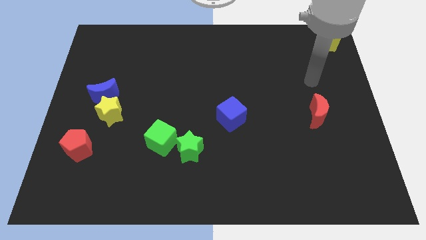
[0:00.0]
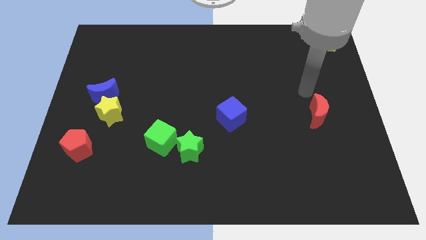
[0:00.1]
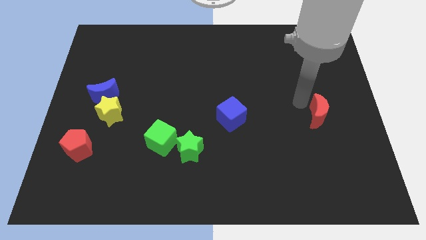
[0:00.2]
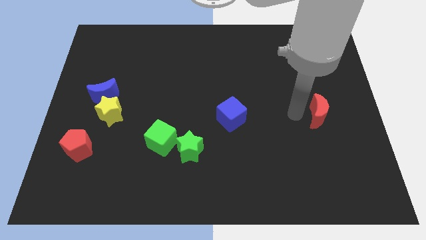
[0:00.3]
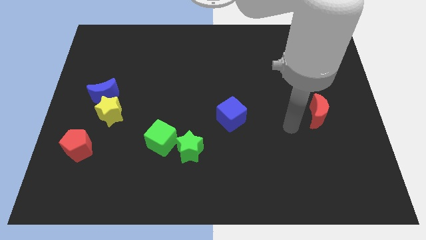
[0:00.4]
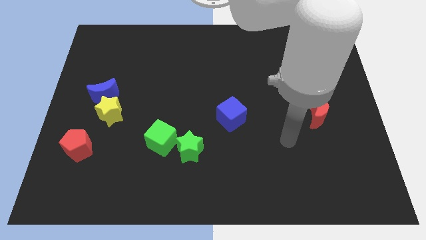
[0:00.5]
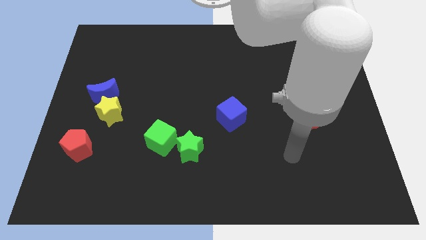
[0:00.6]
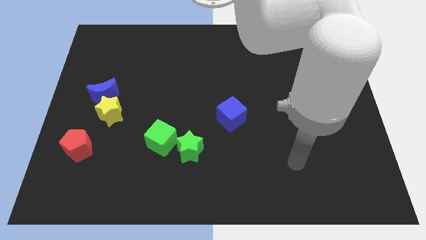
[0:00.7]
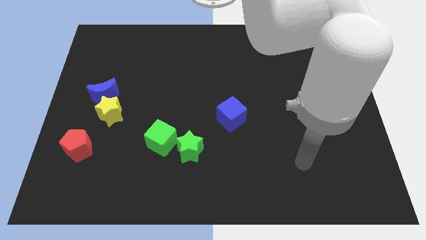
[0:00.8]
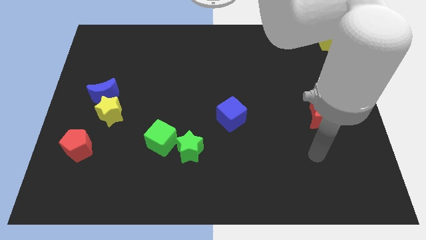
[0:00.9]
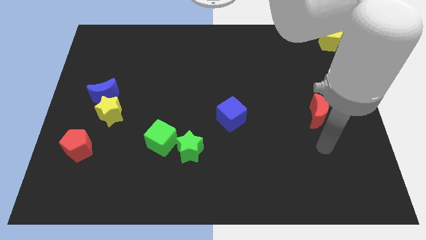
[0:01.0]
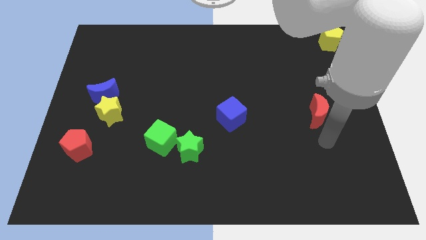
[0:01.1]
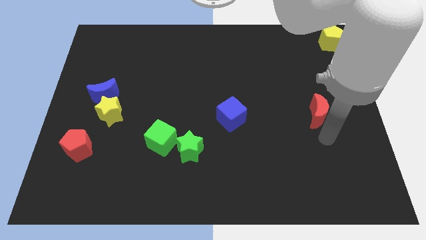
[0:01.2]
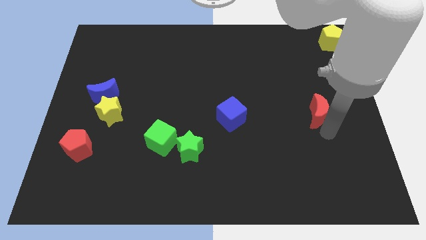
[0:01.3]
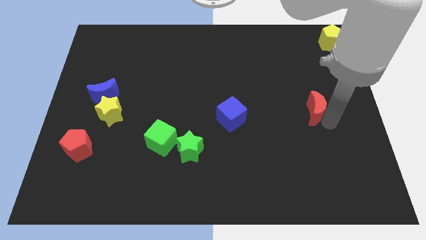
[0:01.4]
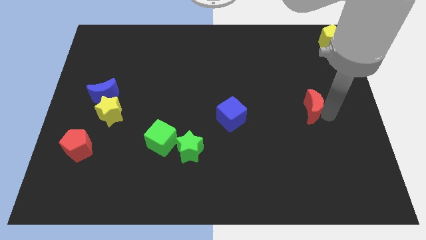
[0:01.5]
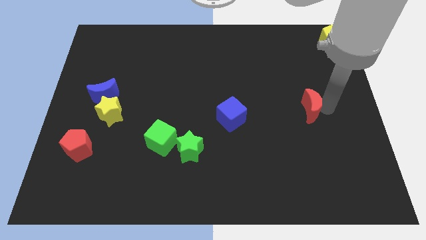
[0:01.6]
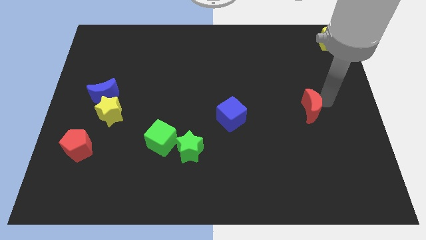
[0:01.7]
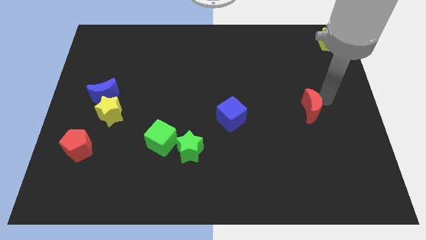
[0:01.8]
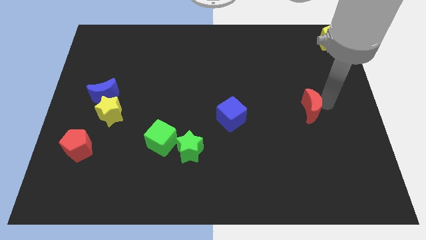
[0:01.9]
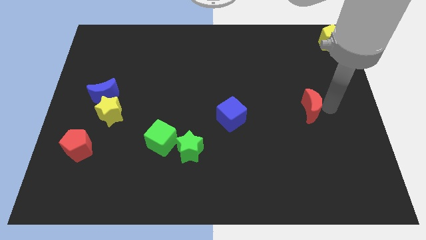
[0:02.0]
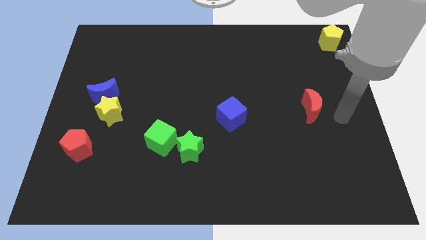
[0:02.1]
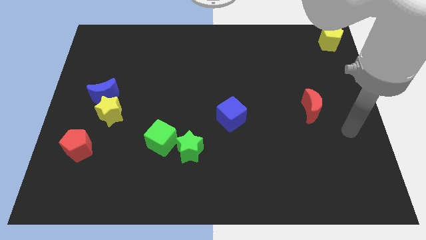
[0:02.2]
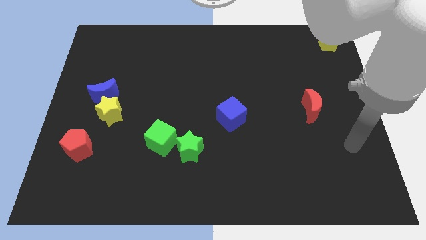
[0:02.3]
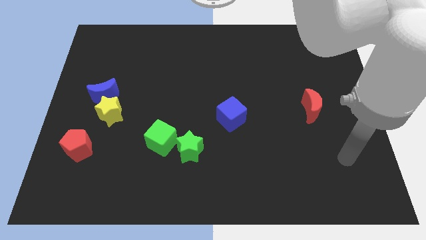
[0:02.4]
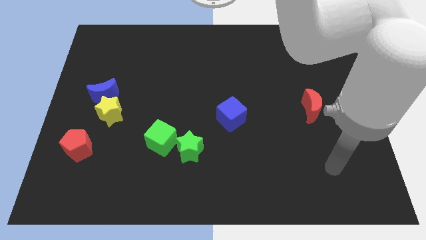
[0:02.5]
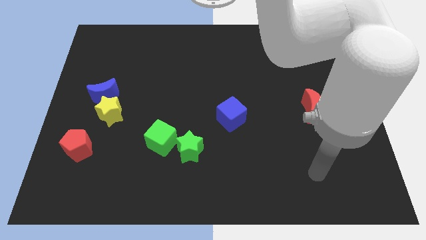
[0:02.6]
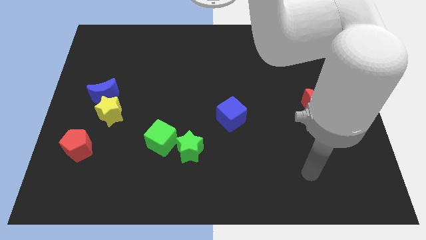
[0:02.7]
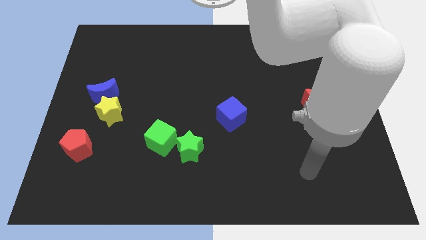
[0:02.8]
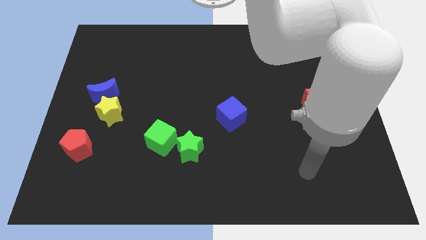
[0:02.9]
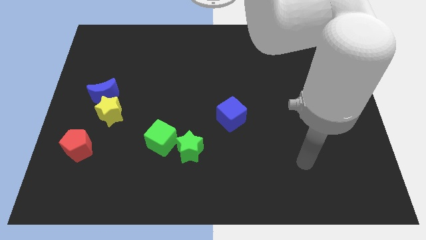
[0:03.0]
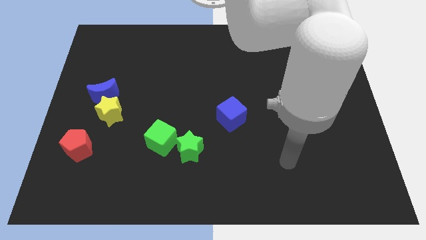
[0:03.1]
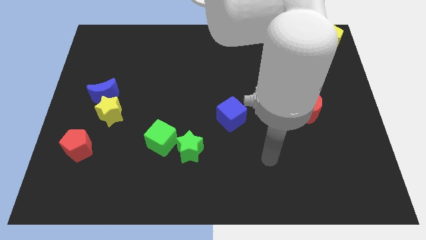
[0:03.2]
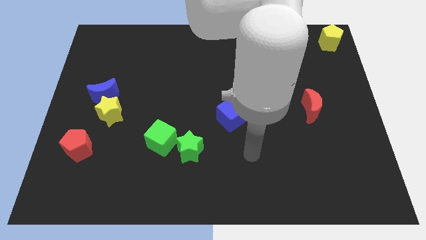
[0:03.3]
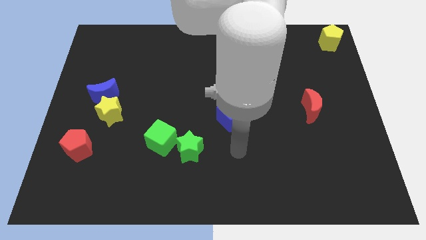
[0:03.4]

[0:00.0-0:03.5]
slightly move the red crescent to the left of the board

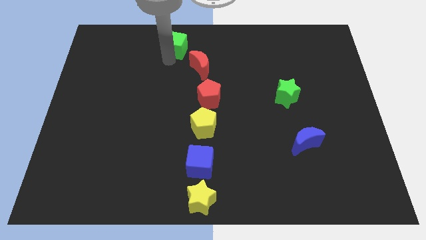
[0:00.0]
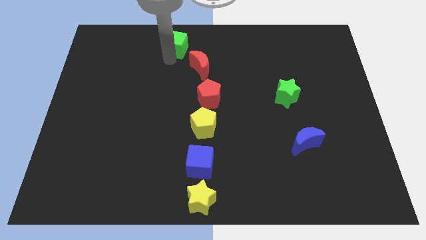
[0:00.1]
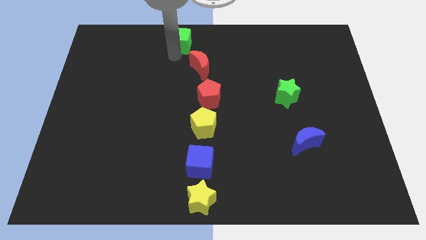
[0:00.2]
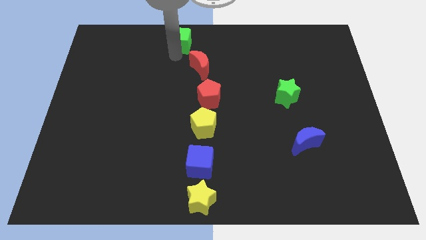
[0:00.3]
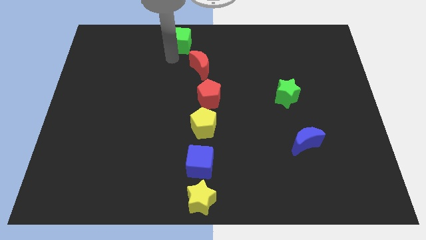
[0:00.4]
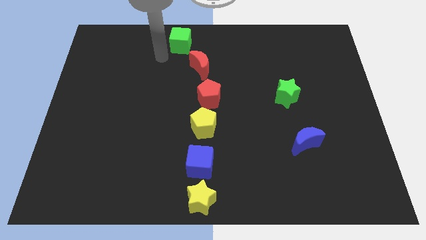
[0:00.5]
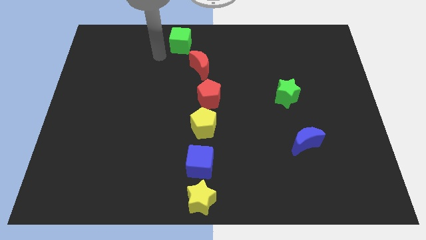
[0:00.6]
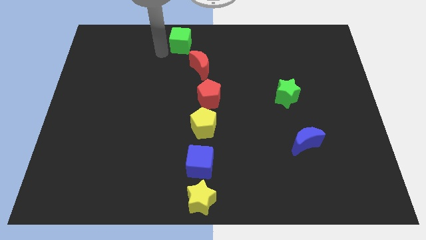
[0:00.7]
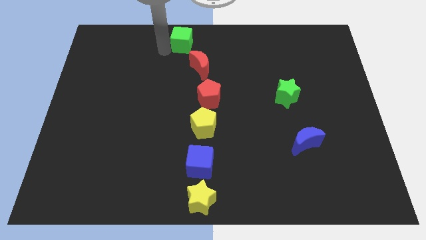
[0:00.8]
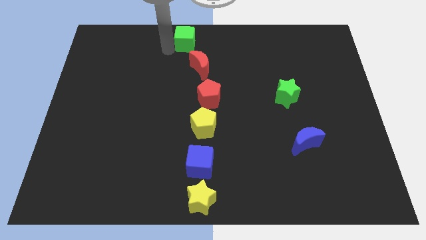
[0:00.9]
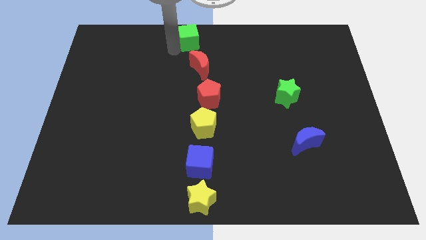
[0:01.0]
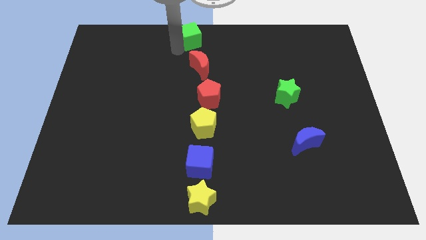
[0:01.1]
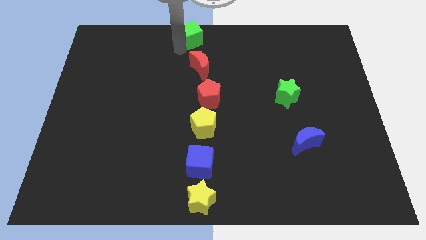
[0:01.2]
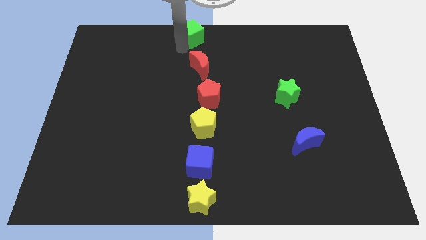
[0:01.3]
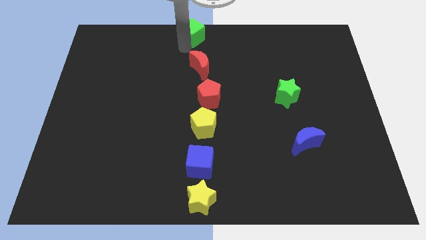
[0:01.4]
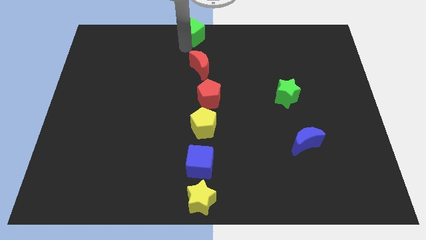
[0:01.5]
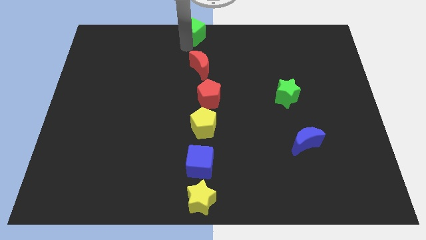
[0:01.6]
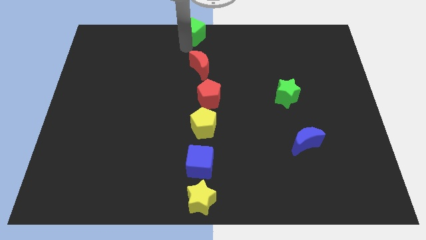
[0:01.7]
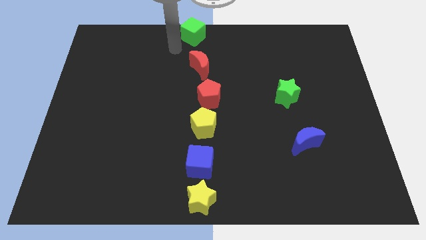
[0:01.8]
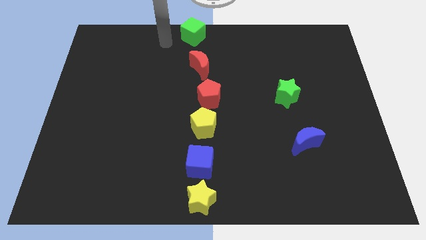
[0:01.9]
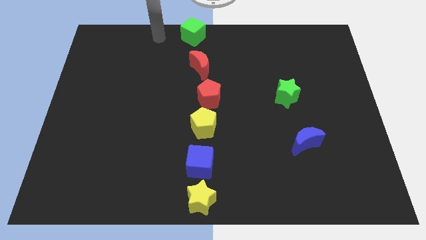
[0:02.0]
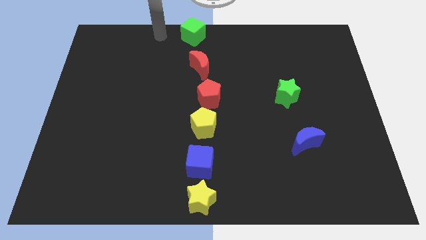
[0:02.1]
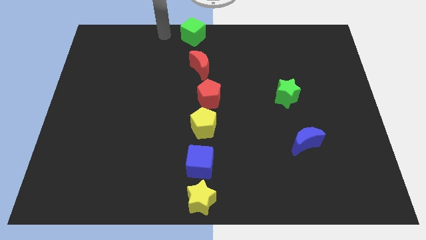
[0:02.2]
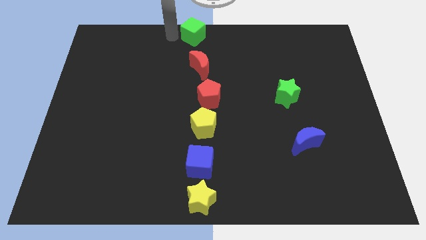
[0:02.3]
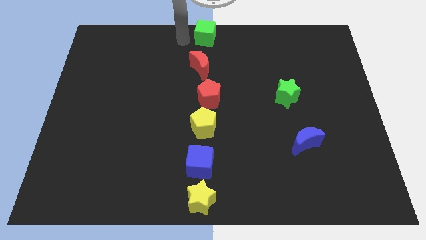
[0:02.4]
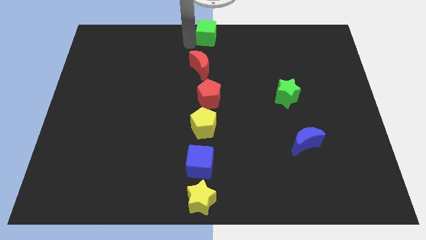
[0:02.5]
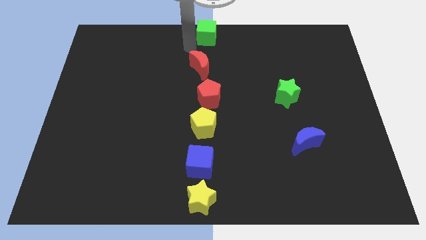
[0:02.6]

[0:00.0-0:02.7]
push the green cube to the top center of the board

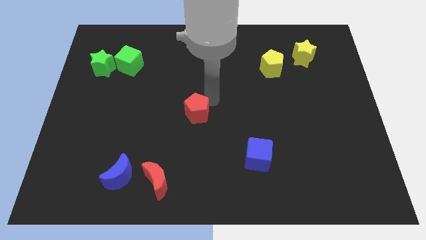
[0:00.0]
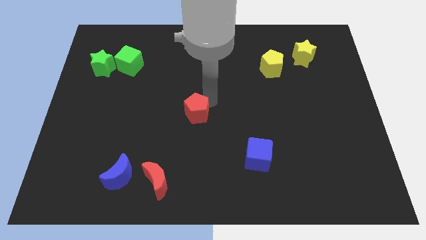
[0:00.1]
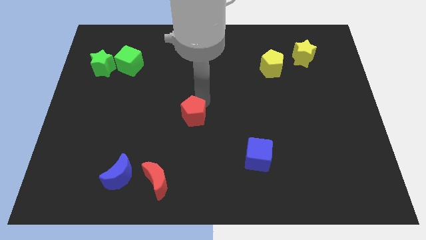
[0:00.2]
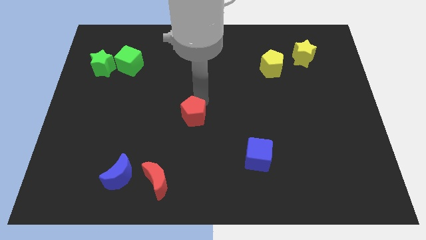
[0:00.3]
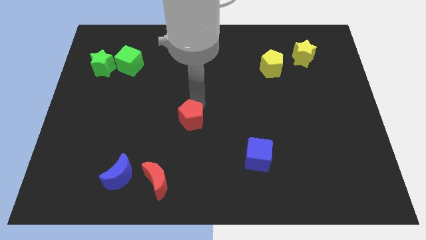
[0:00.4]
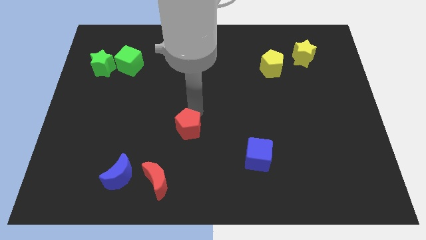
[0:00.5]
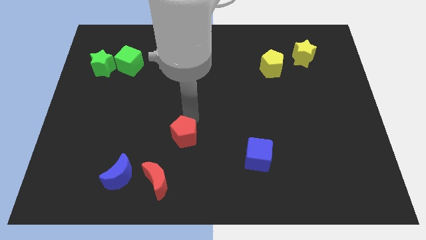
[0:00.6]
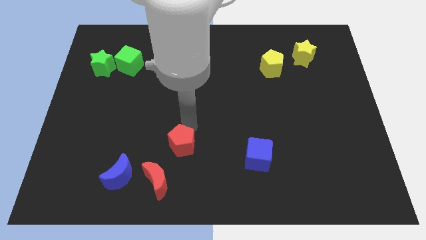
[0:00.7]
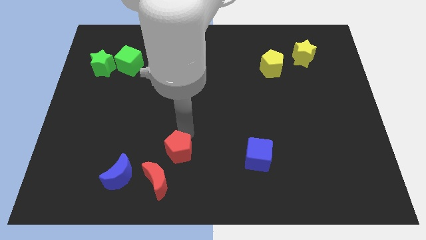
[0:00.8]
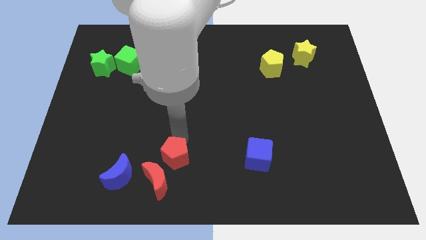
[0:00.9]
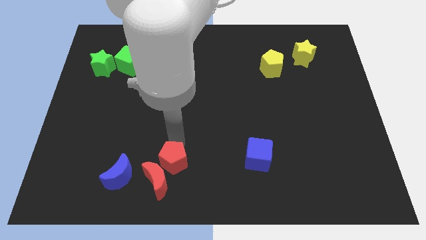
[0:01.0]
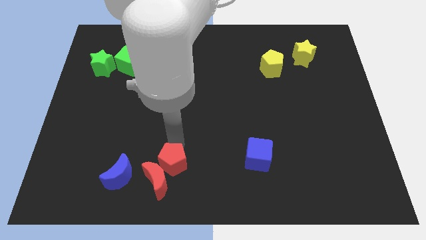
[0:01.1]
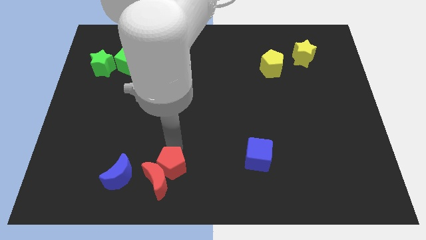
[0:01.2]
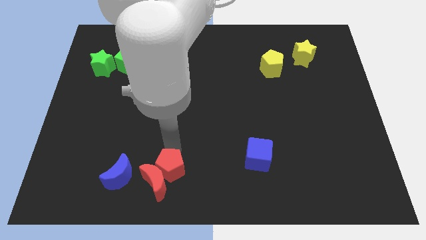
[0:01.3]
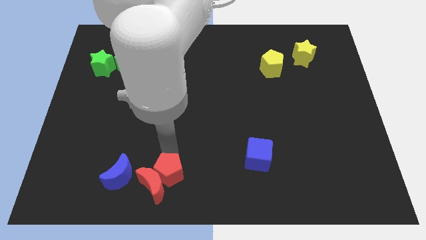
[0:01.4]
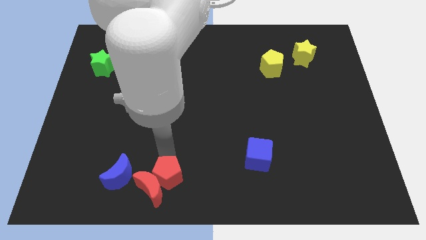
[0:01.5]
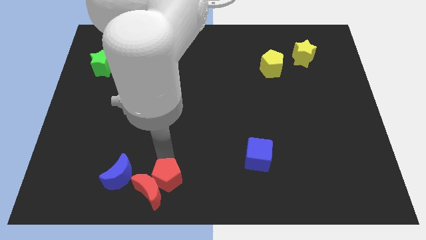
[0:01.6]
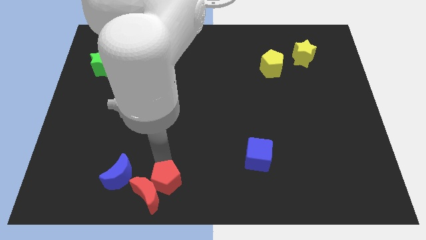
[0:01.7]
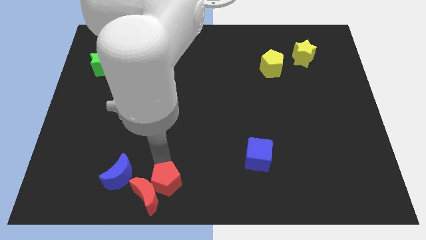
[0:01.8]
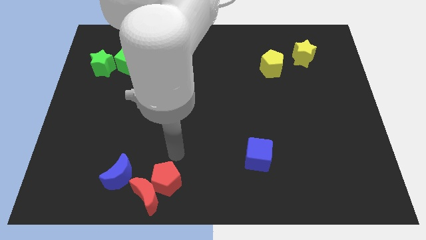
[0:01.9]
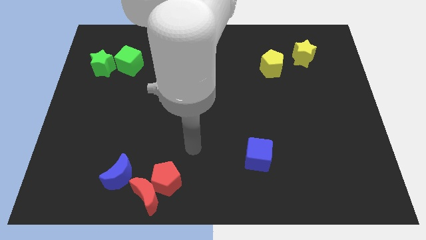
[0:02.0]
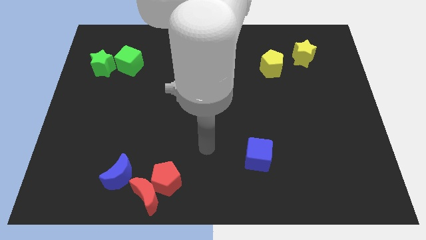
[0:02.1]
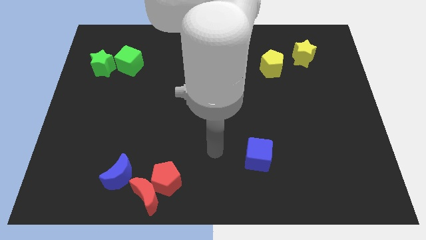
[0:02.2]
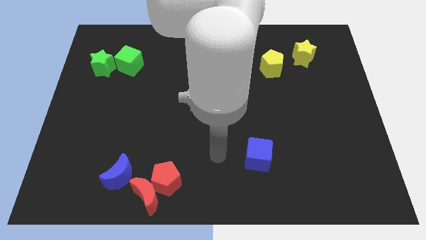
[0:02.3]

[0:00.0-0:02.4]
push the red pentagon into the red crescent

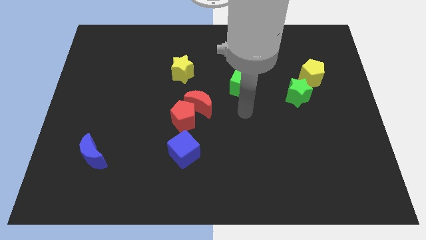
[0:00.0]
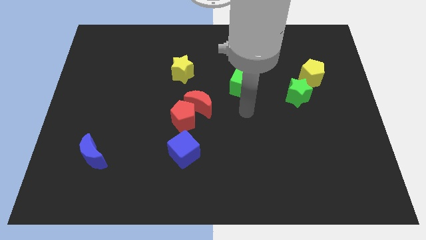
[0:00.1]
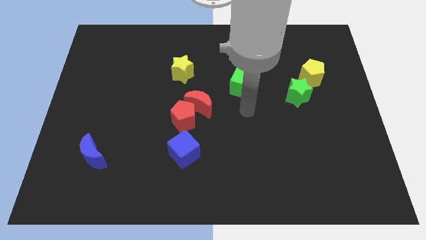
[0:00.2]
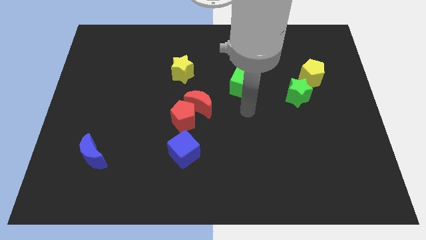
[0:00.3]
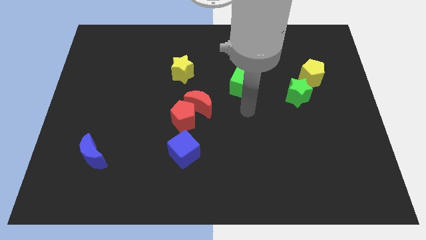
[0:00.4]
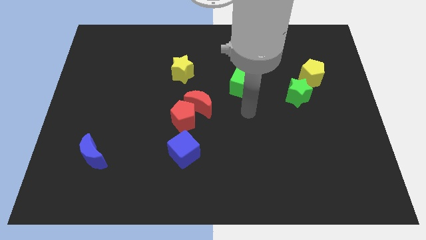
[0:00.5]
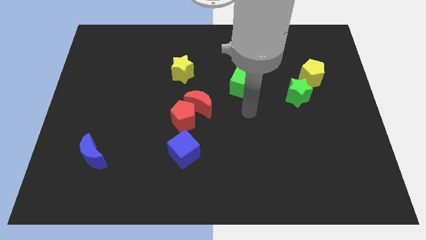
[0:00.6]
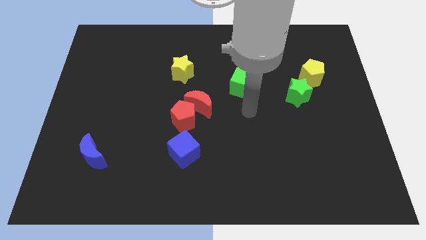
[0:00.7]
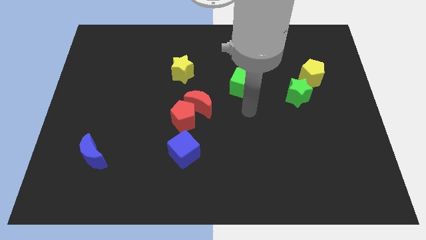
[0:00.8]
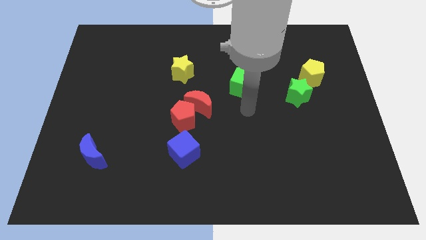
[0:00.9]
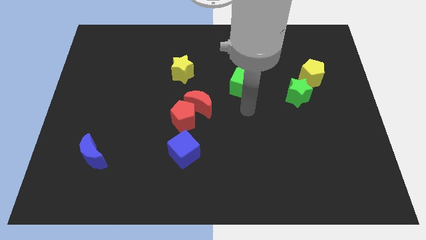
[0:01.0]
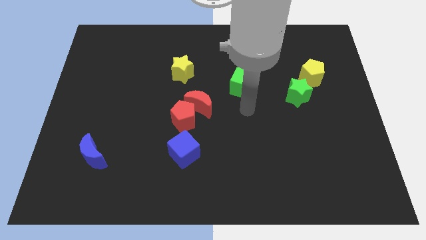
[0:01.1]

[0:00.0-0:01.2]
place the arm towards the bottom side of the green cube
